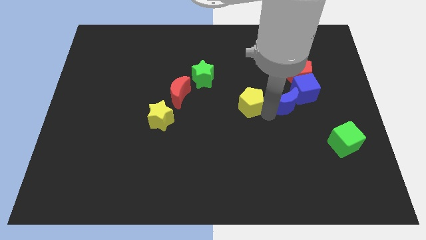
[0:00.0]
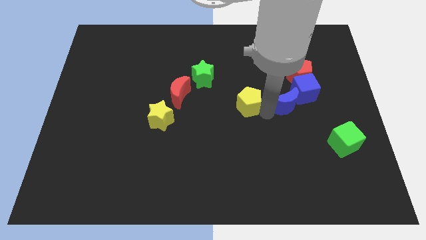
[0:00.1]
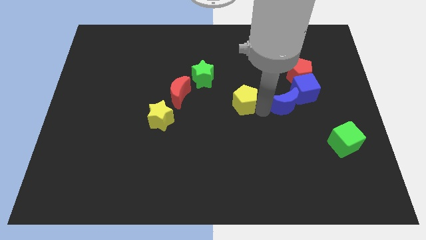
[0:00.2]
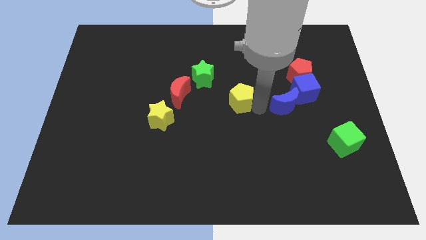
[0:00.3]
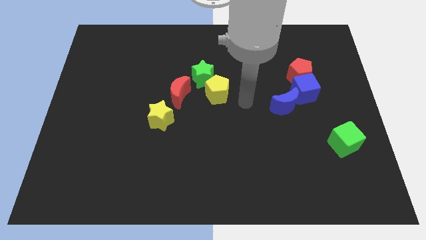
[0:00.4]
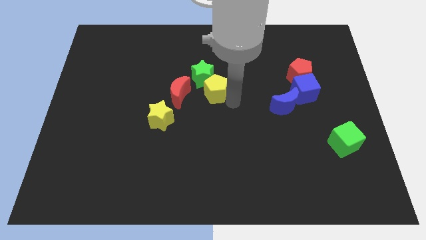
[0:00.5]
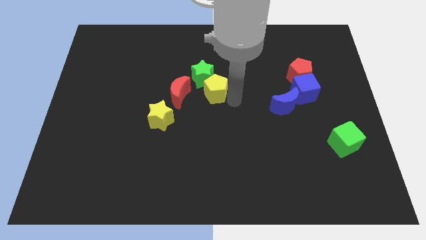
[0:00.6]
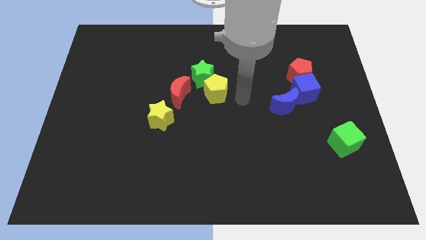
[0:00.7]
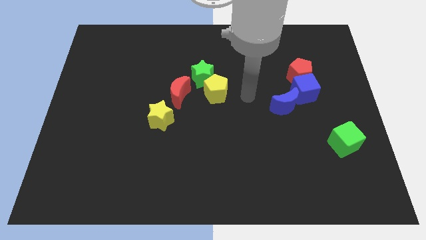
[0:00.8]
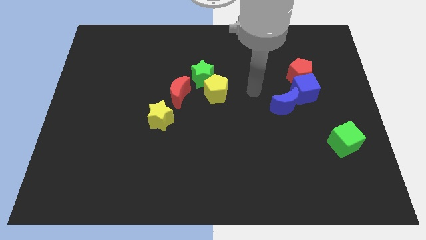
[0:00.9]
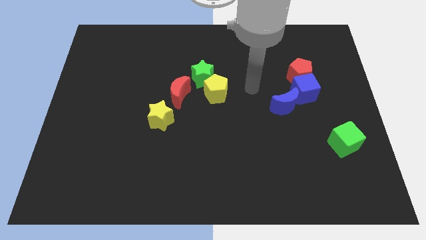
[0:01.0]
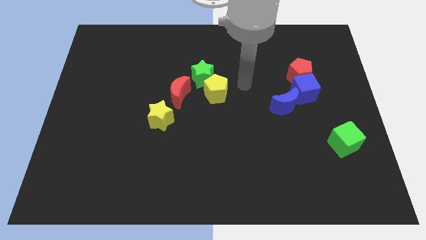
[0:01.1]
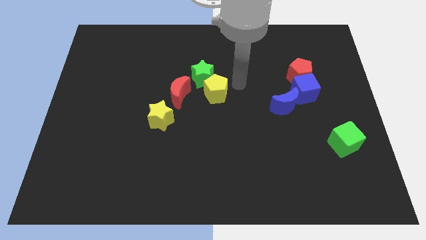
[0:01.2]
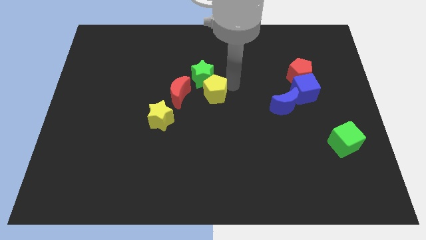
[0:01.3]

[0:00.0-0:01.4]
place the yellow pentagon to the bottom right of the green star

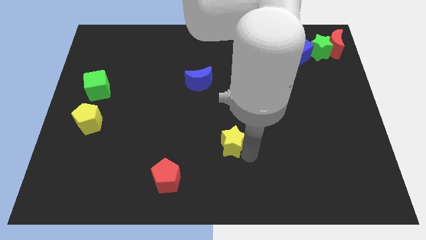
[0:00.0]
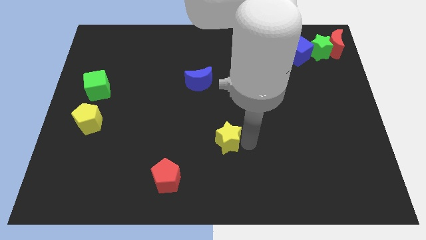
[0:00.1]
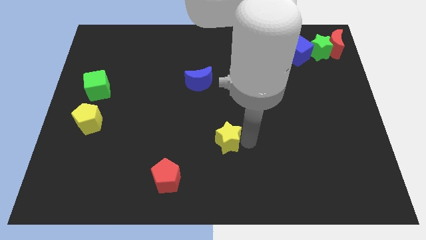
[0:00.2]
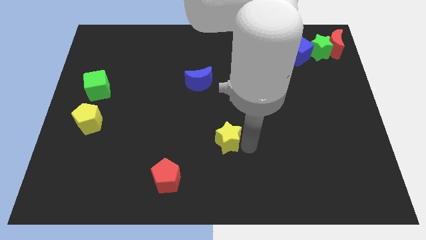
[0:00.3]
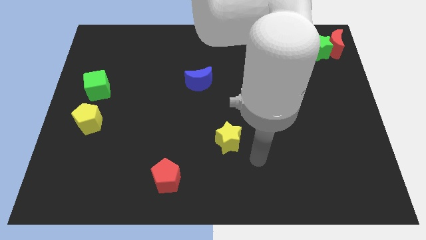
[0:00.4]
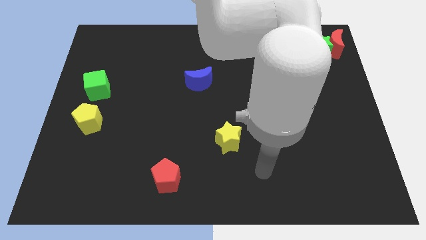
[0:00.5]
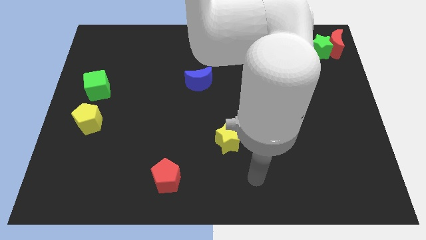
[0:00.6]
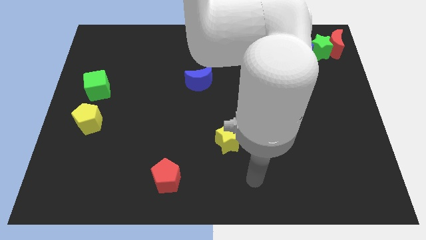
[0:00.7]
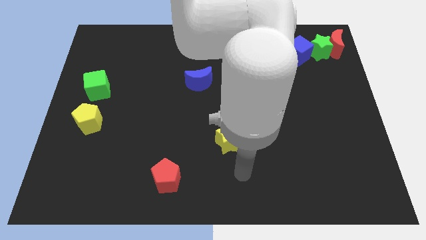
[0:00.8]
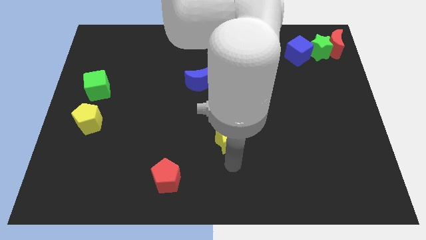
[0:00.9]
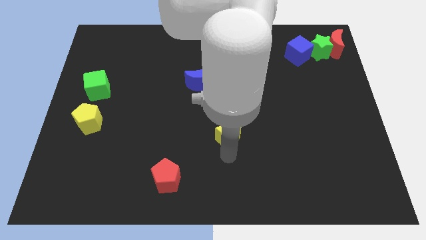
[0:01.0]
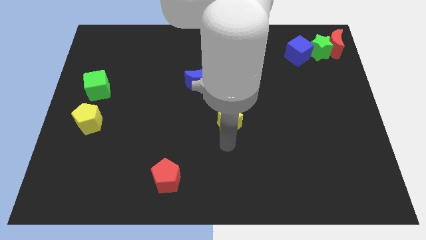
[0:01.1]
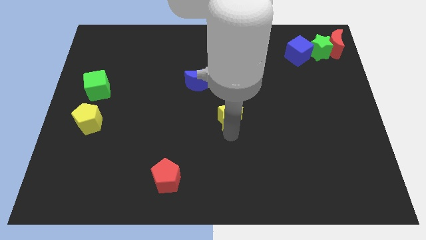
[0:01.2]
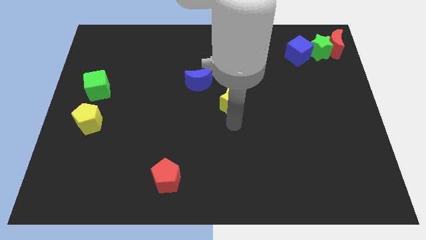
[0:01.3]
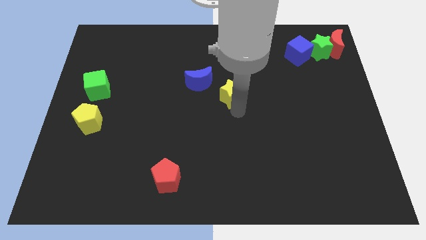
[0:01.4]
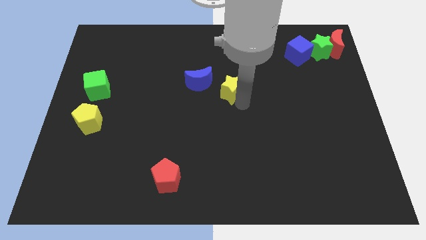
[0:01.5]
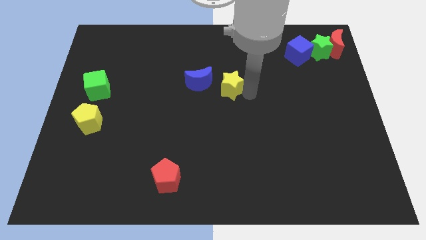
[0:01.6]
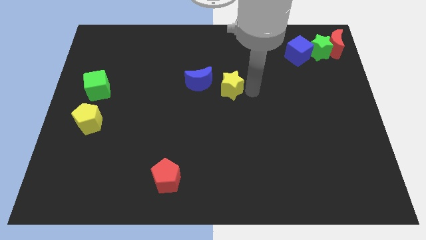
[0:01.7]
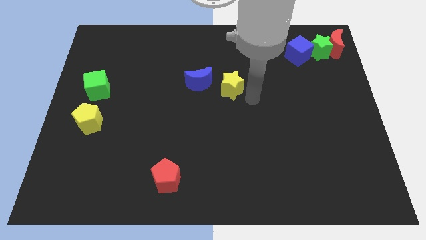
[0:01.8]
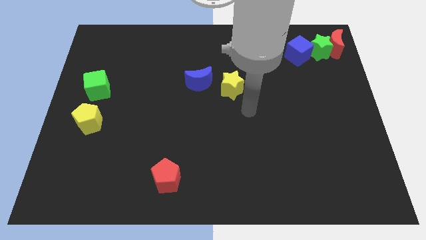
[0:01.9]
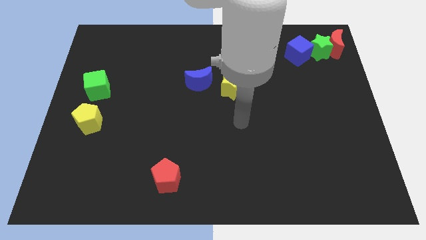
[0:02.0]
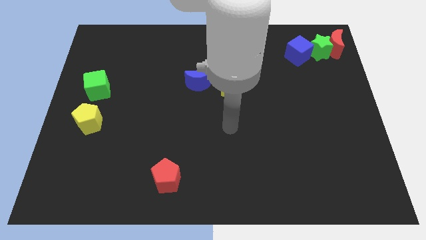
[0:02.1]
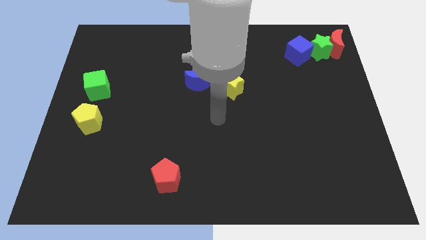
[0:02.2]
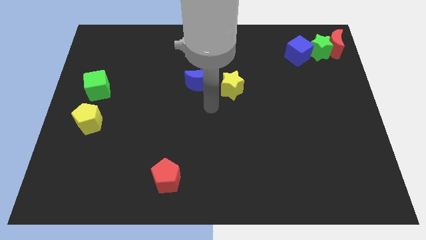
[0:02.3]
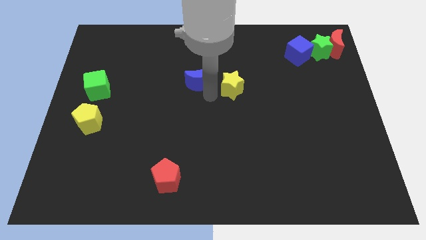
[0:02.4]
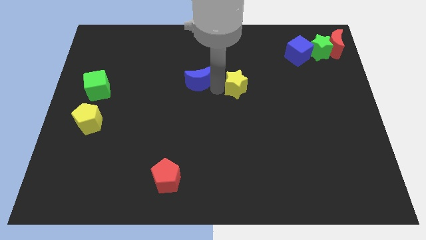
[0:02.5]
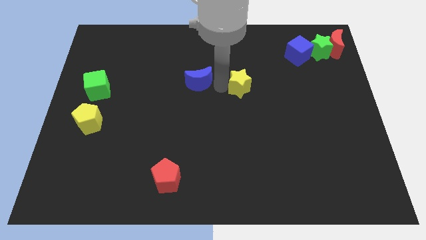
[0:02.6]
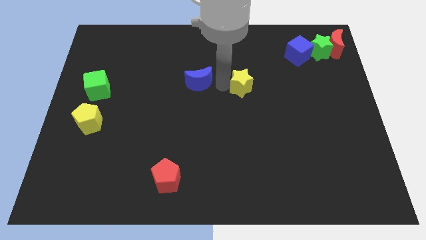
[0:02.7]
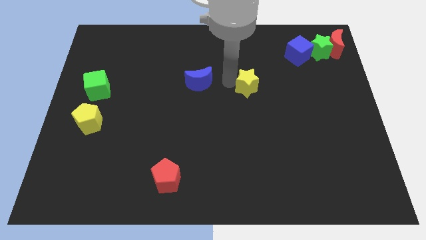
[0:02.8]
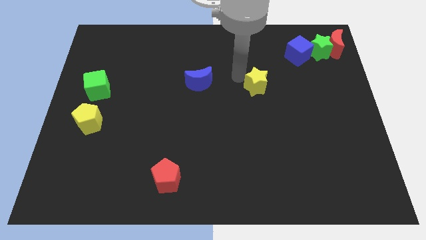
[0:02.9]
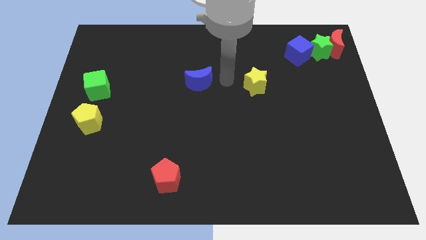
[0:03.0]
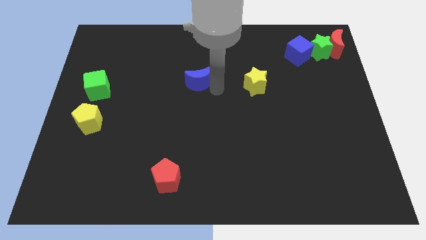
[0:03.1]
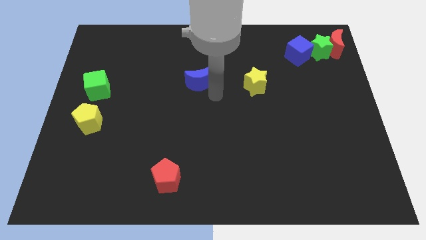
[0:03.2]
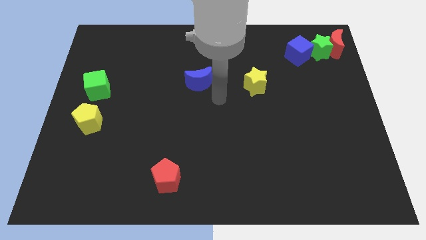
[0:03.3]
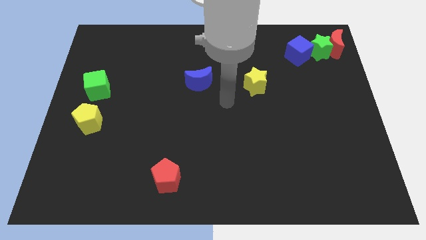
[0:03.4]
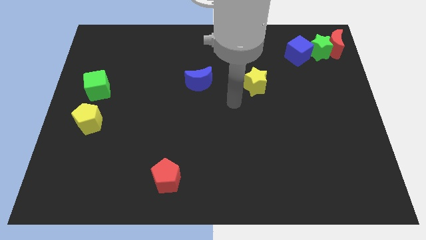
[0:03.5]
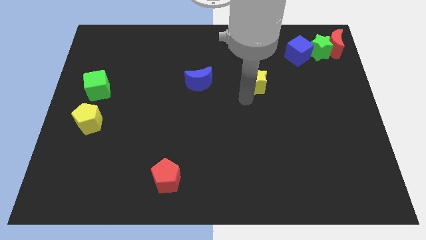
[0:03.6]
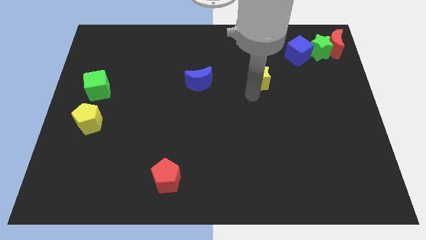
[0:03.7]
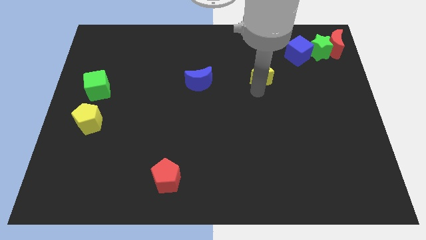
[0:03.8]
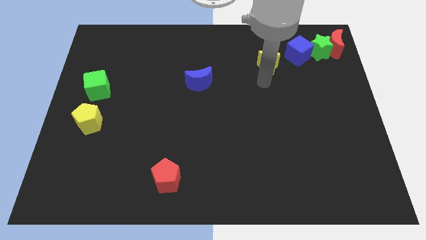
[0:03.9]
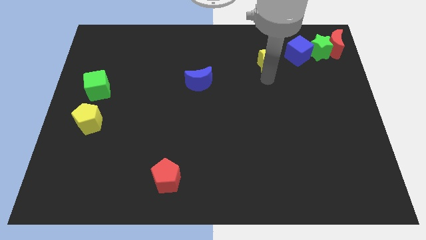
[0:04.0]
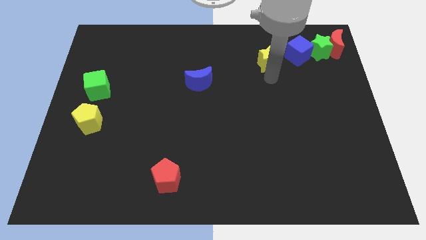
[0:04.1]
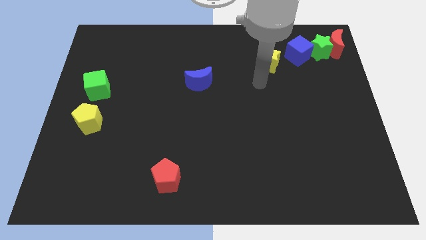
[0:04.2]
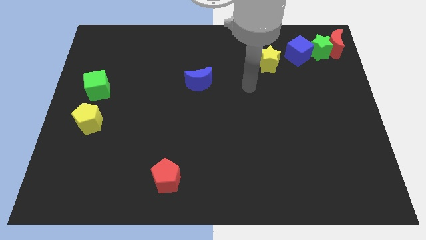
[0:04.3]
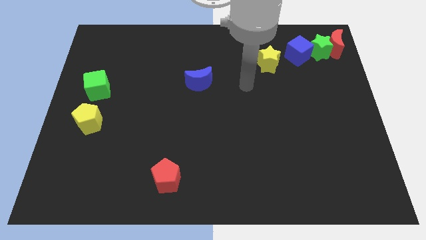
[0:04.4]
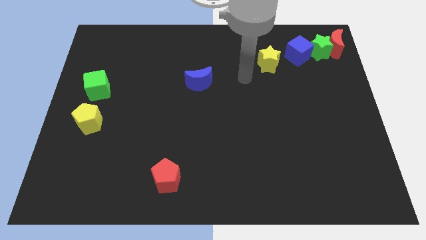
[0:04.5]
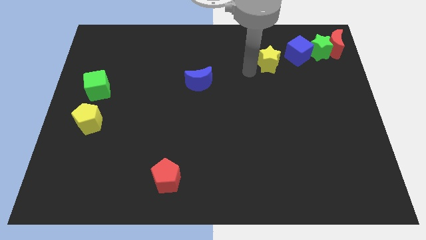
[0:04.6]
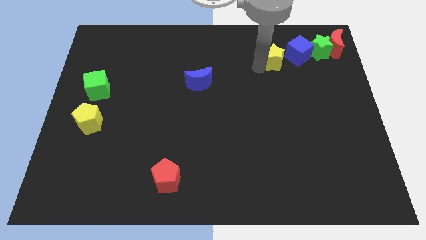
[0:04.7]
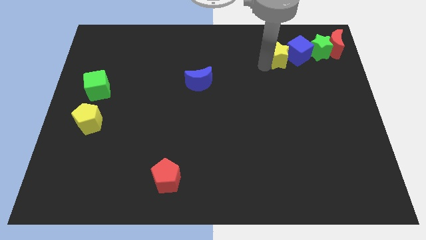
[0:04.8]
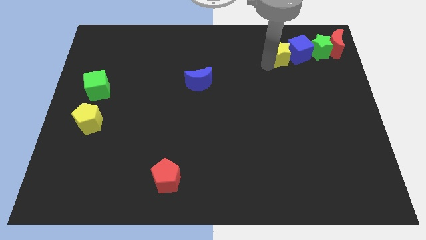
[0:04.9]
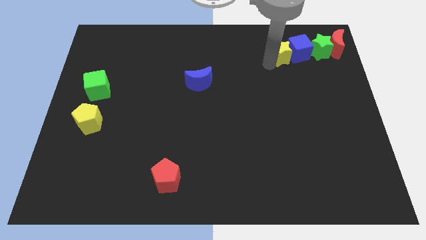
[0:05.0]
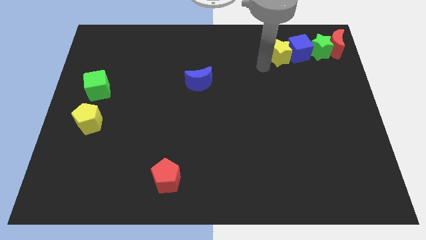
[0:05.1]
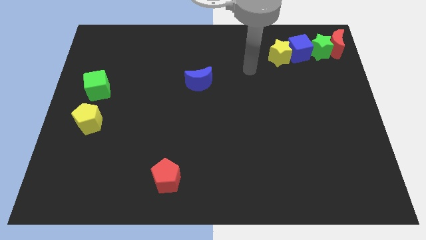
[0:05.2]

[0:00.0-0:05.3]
place the yellow star to the left of the blue cube

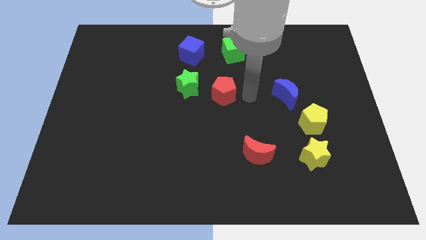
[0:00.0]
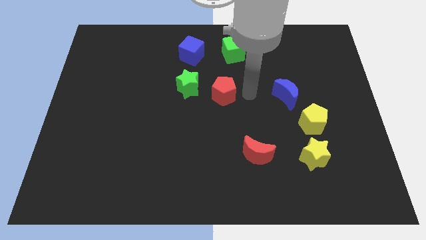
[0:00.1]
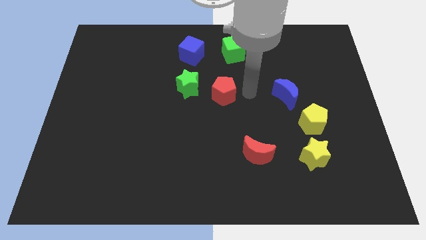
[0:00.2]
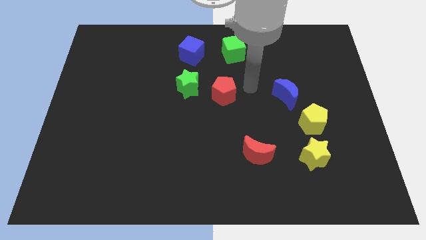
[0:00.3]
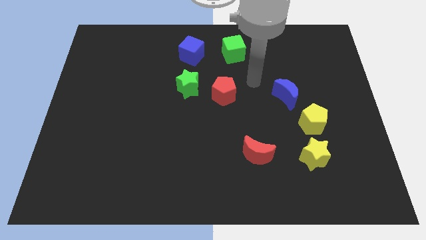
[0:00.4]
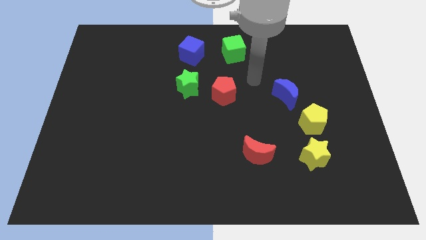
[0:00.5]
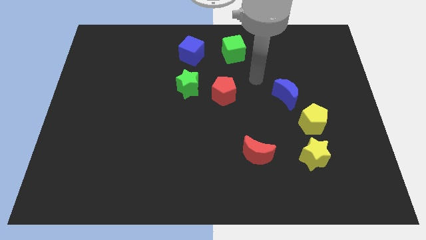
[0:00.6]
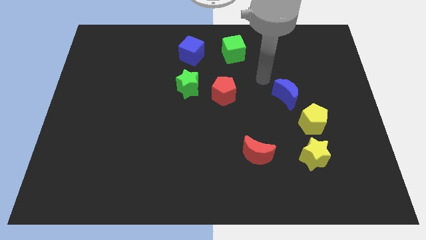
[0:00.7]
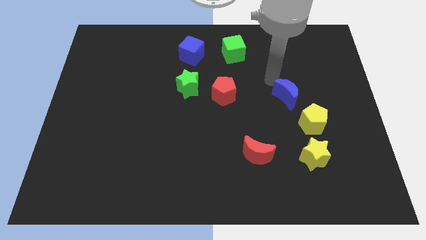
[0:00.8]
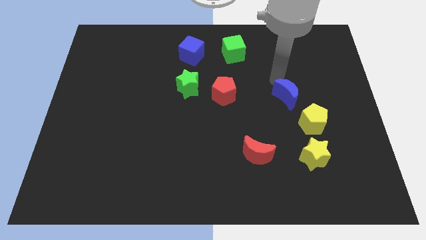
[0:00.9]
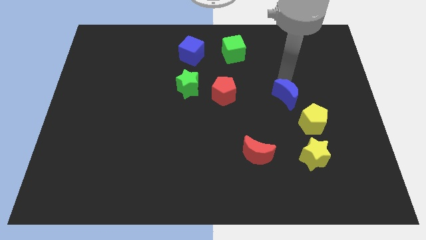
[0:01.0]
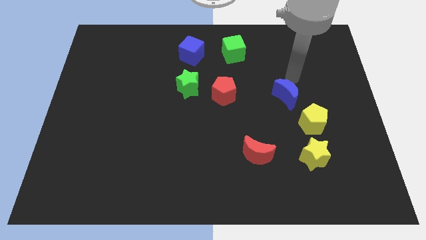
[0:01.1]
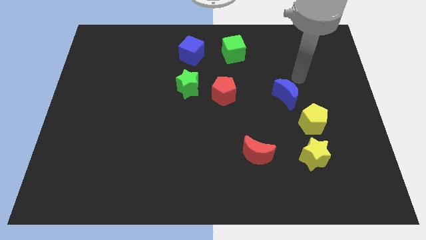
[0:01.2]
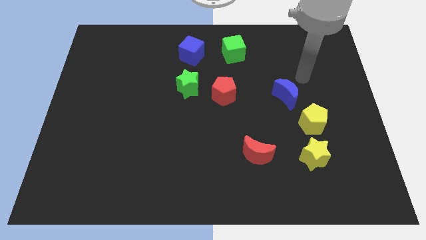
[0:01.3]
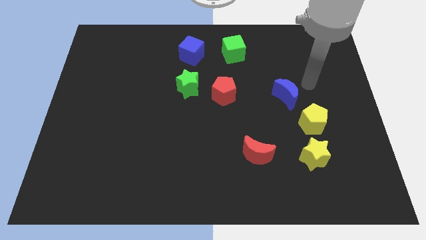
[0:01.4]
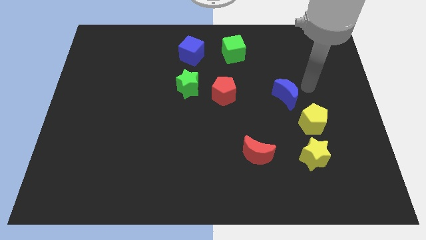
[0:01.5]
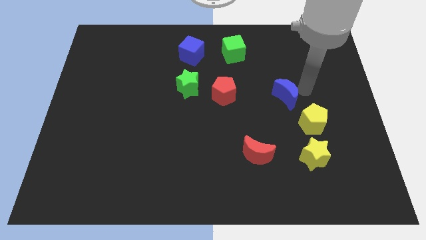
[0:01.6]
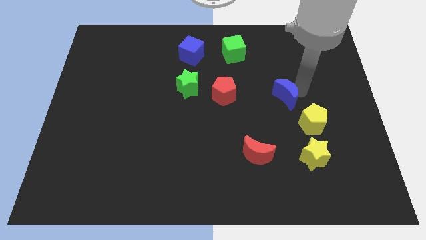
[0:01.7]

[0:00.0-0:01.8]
place your arm at the right of the blue crescent

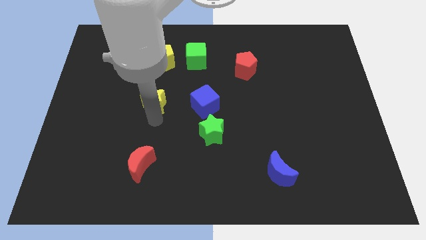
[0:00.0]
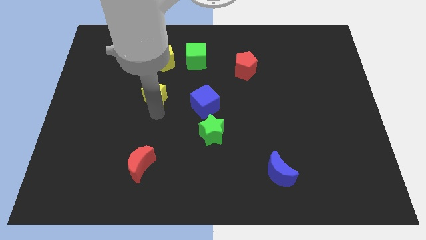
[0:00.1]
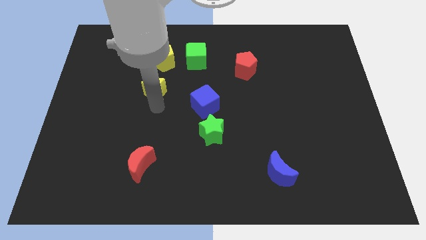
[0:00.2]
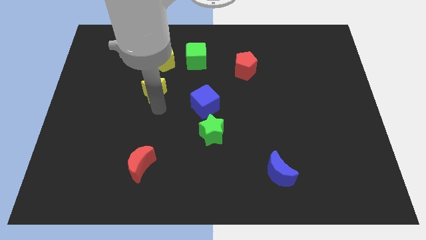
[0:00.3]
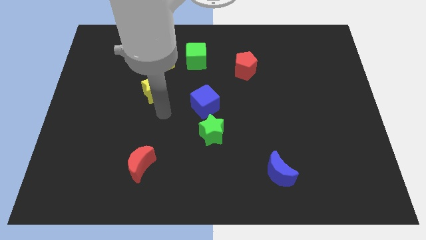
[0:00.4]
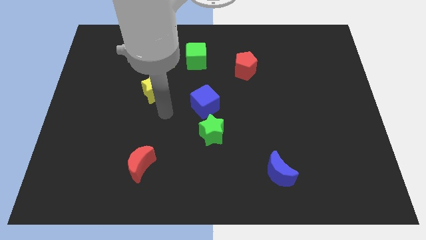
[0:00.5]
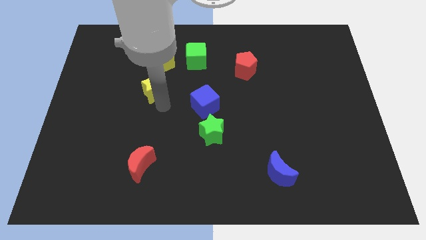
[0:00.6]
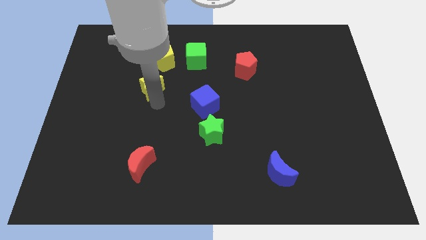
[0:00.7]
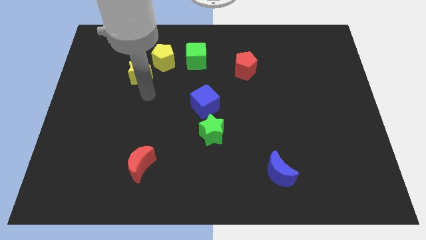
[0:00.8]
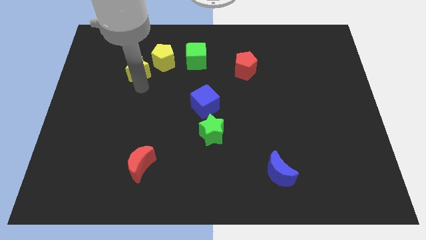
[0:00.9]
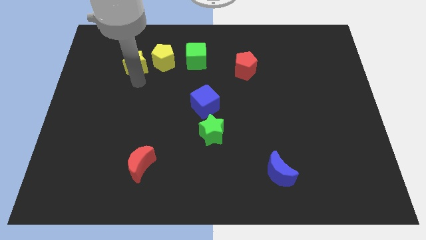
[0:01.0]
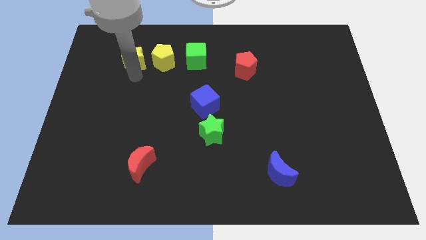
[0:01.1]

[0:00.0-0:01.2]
place the yellow star left to the yellow pentagon
